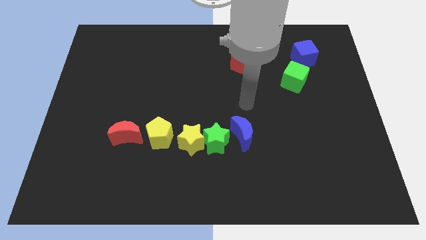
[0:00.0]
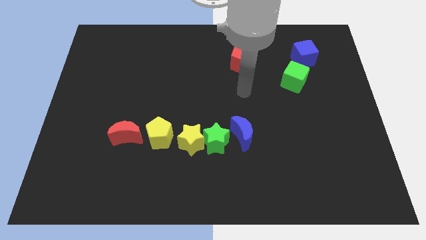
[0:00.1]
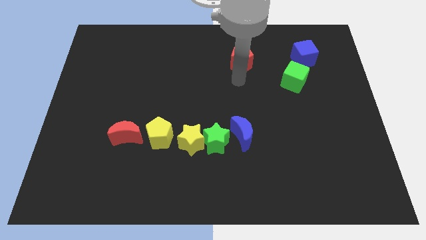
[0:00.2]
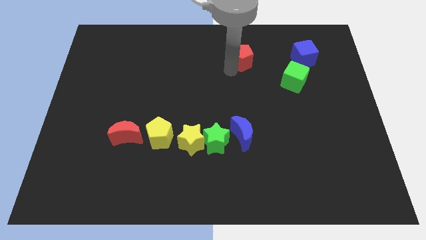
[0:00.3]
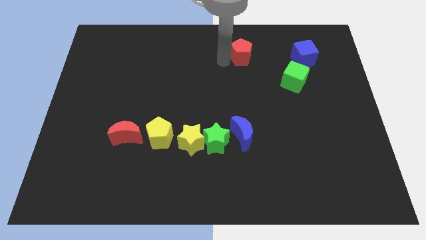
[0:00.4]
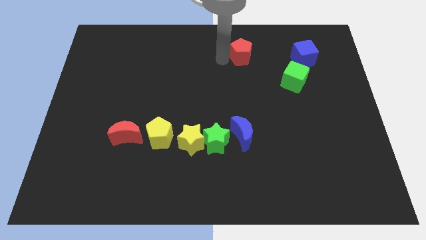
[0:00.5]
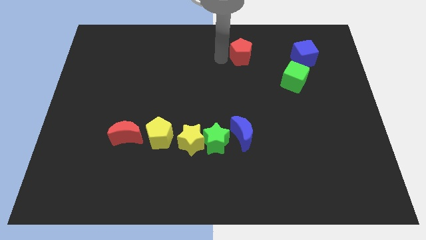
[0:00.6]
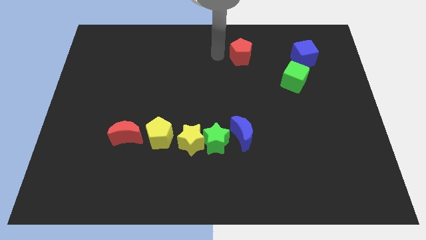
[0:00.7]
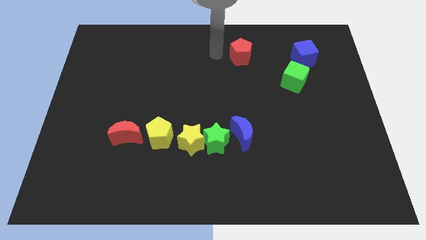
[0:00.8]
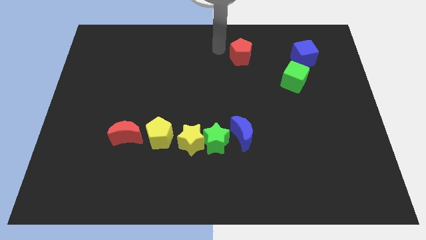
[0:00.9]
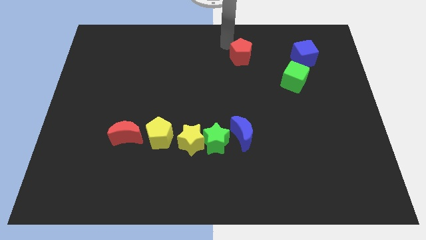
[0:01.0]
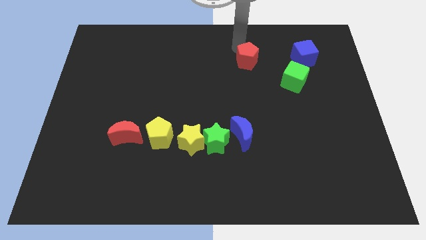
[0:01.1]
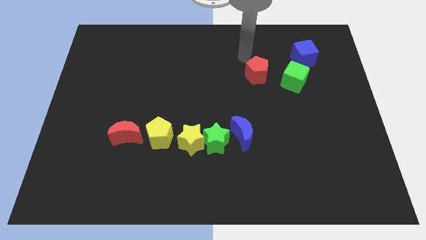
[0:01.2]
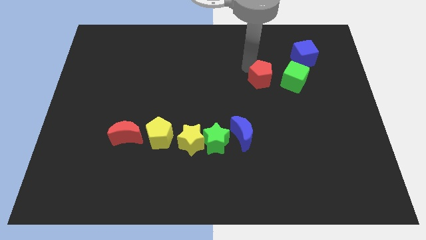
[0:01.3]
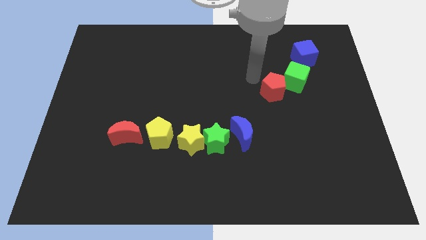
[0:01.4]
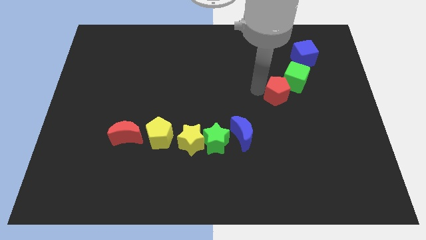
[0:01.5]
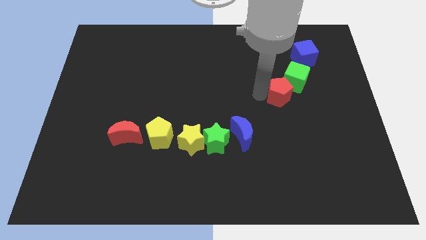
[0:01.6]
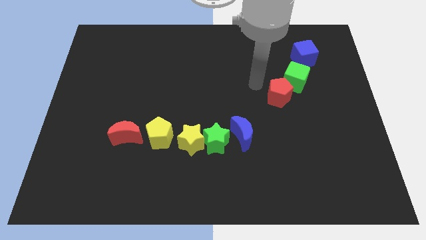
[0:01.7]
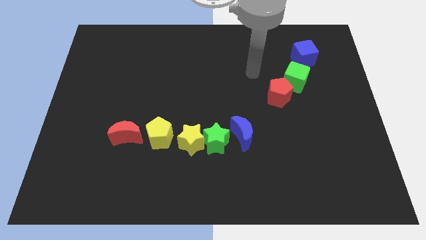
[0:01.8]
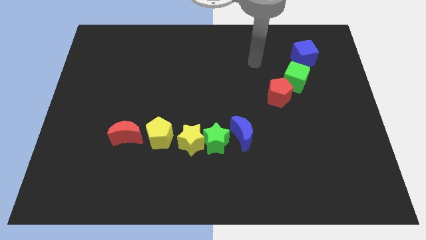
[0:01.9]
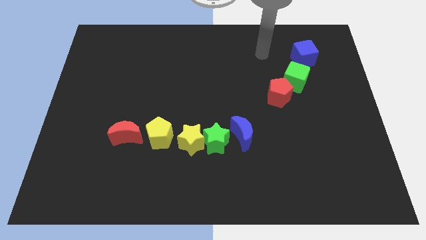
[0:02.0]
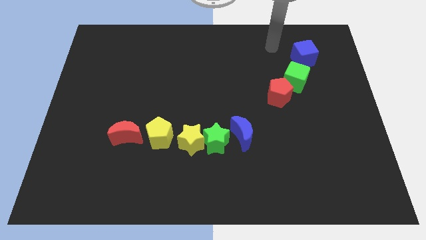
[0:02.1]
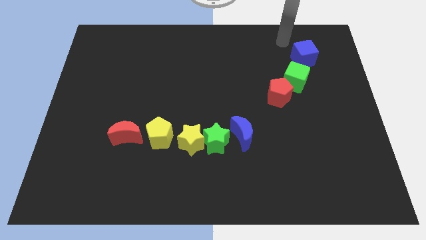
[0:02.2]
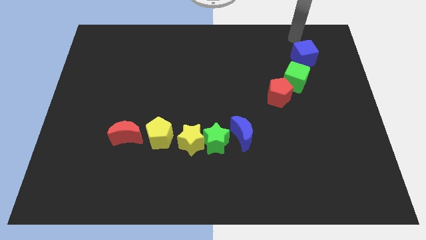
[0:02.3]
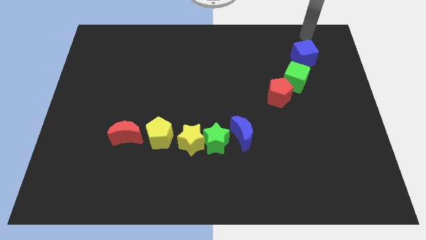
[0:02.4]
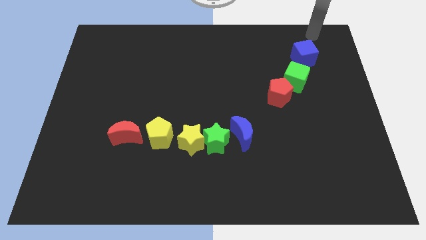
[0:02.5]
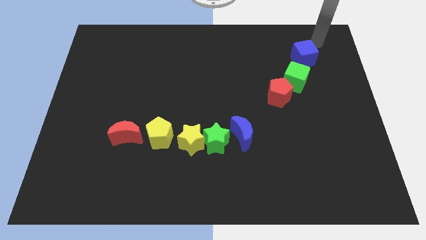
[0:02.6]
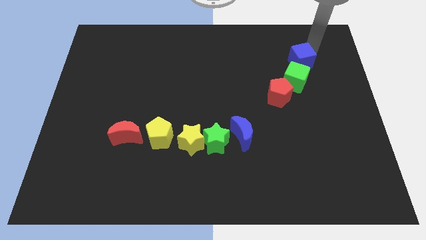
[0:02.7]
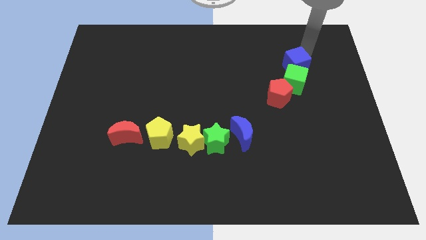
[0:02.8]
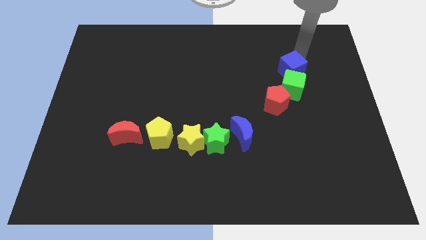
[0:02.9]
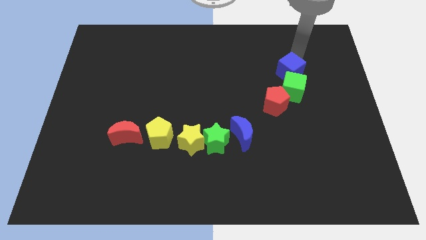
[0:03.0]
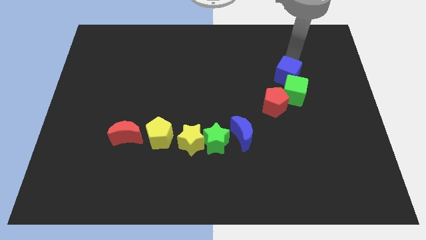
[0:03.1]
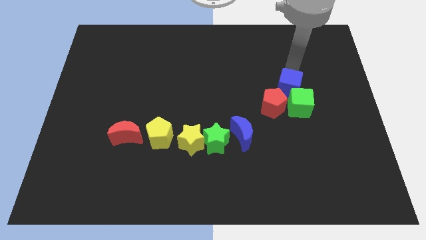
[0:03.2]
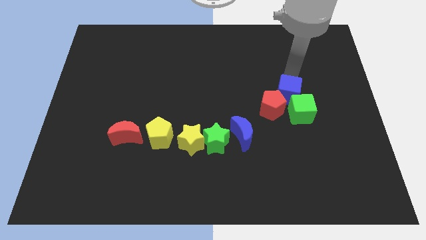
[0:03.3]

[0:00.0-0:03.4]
drag both the cubes and red pentagon towards the bottom side of the board

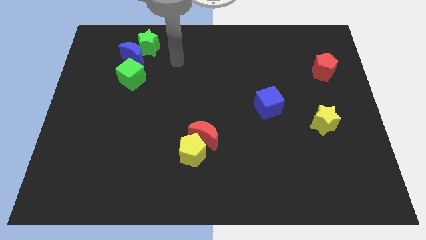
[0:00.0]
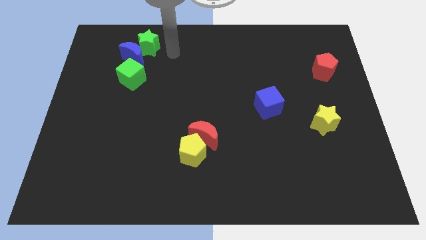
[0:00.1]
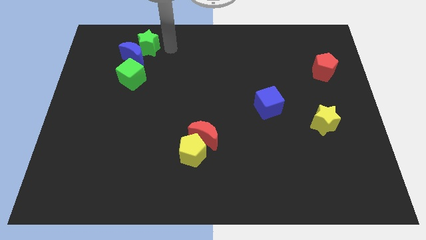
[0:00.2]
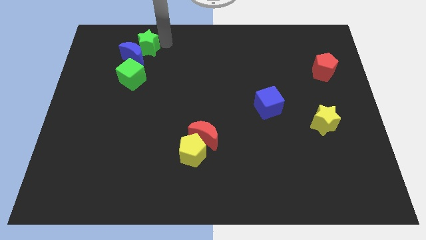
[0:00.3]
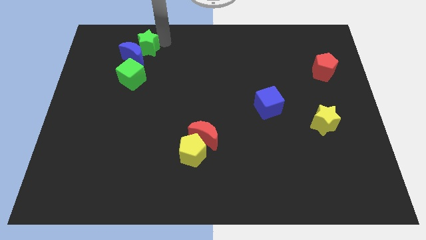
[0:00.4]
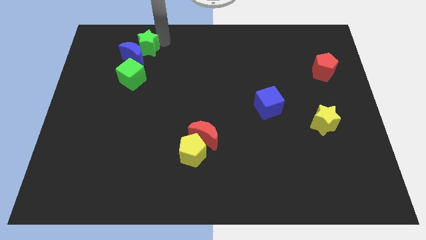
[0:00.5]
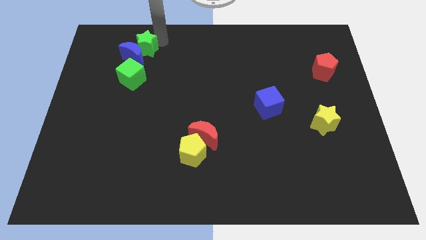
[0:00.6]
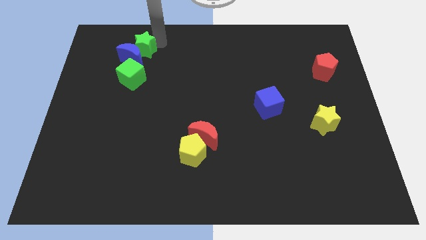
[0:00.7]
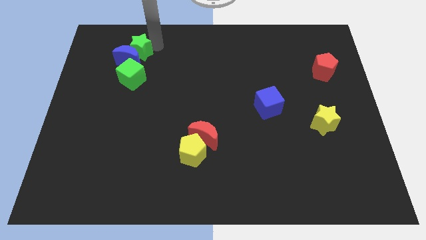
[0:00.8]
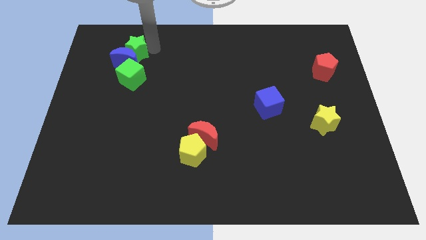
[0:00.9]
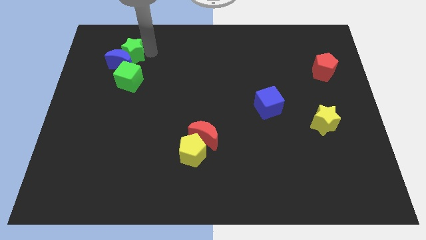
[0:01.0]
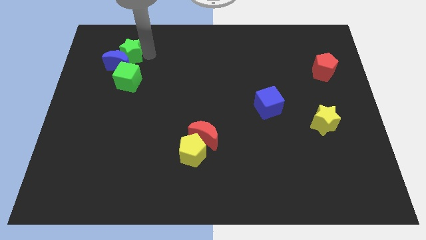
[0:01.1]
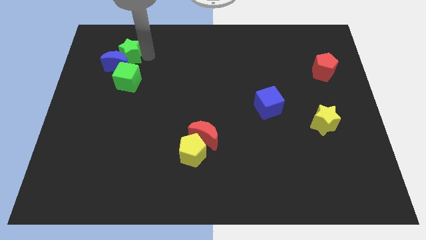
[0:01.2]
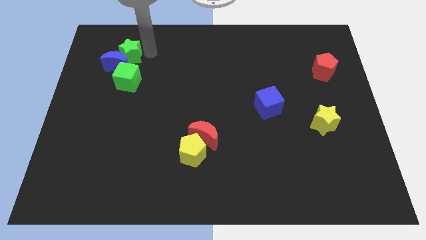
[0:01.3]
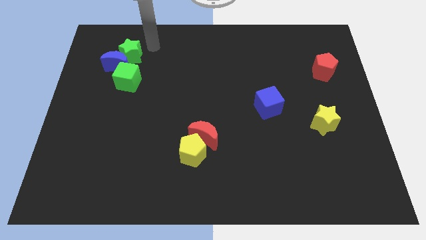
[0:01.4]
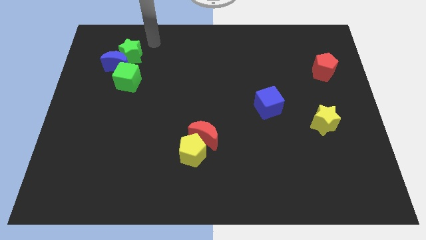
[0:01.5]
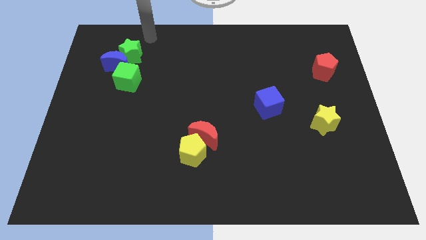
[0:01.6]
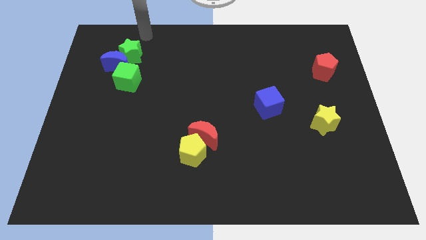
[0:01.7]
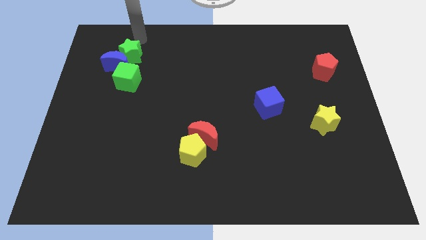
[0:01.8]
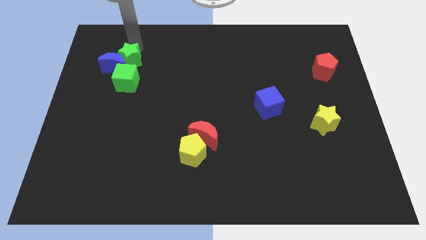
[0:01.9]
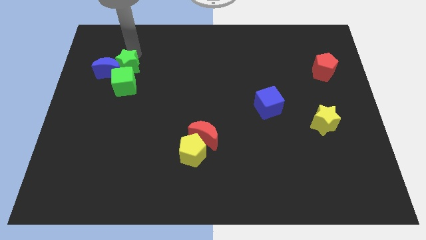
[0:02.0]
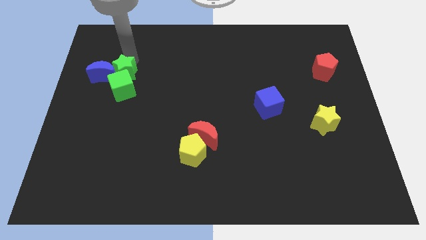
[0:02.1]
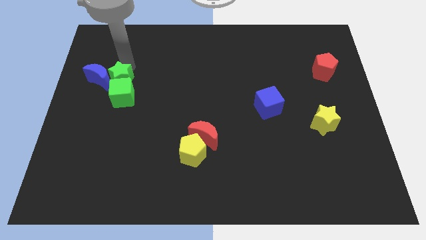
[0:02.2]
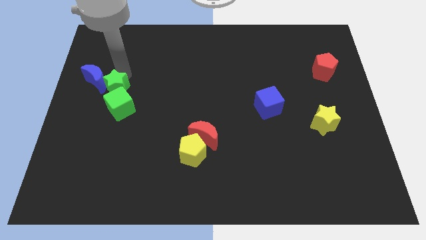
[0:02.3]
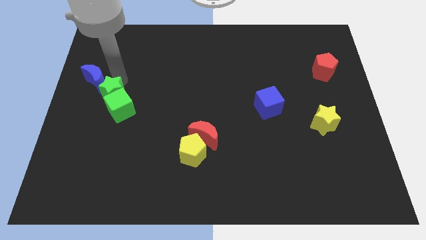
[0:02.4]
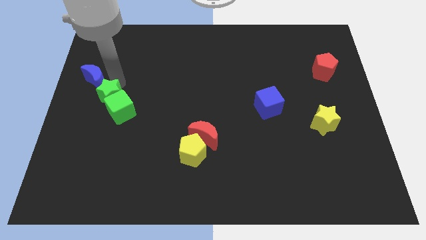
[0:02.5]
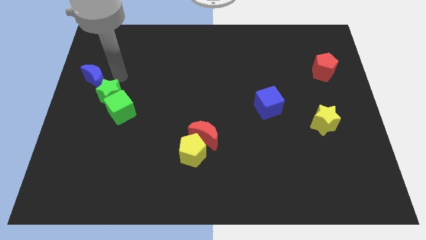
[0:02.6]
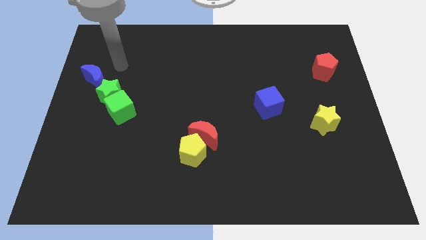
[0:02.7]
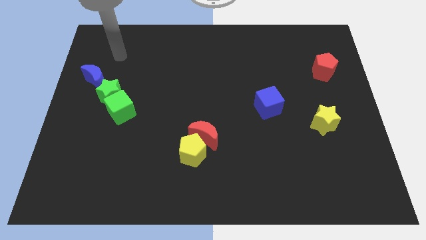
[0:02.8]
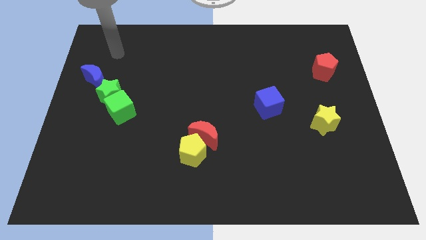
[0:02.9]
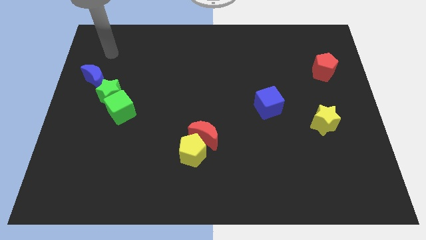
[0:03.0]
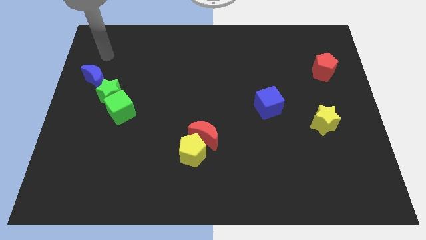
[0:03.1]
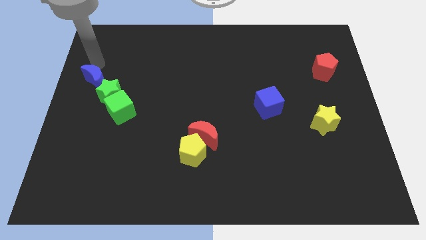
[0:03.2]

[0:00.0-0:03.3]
push the green star downwards

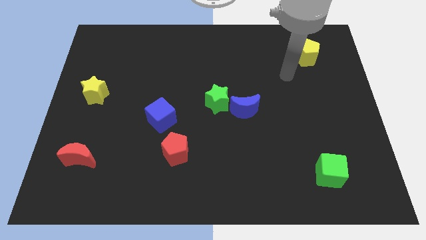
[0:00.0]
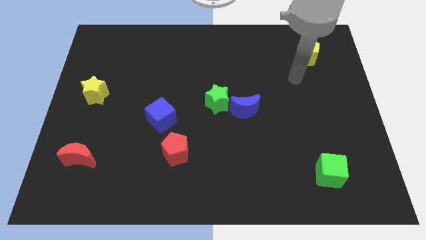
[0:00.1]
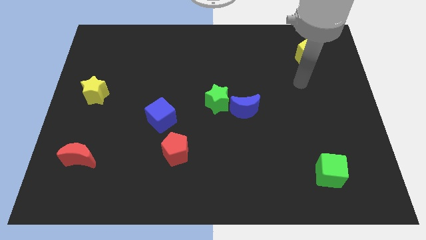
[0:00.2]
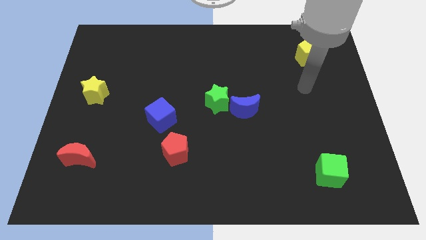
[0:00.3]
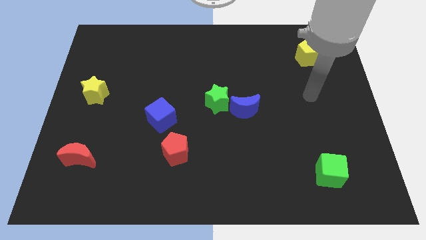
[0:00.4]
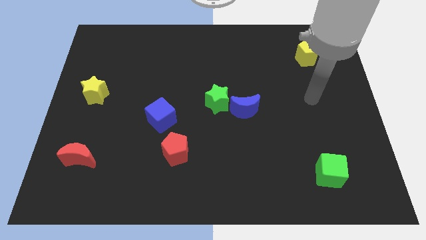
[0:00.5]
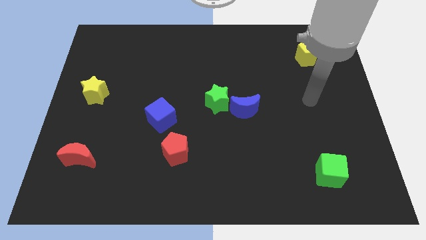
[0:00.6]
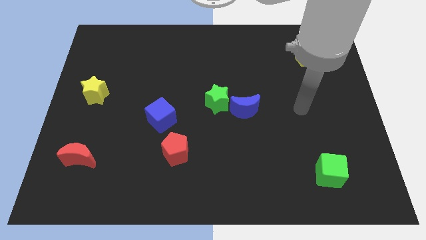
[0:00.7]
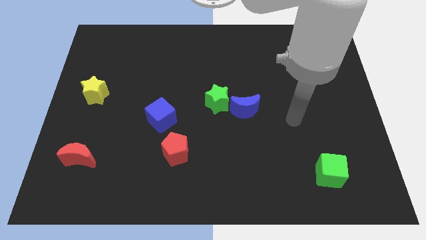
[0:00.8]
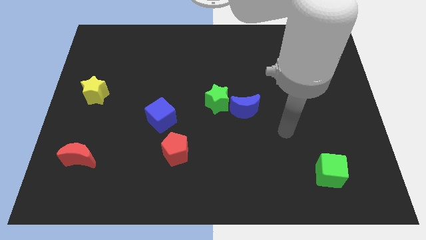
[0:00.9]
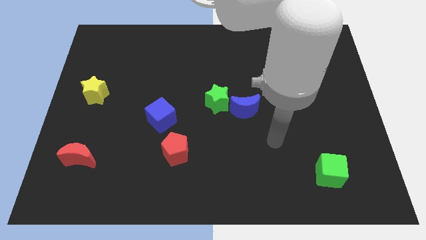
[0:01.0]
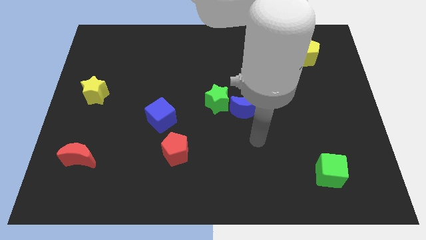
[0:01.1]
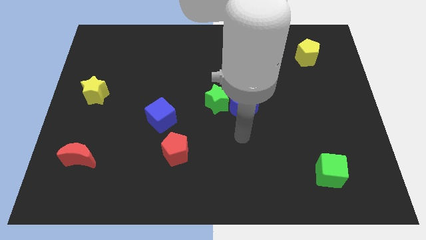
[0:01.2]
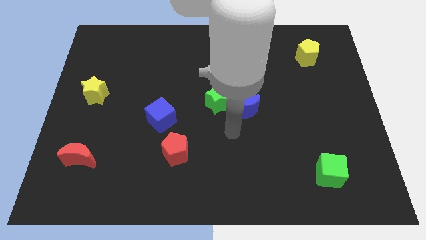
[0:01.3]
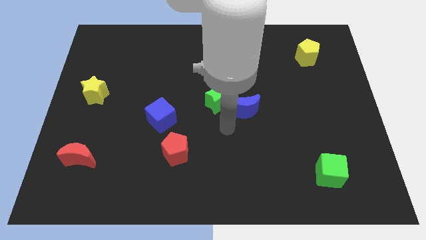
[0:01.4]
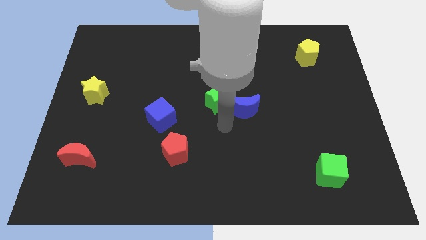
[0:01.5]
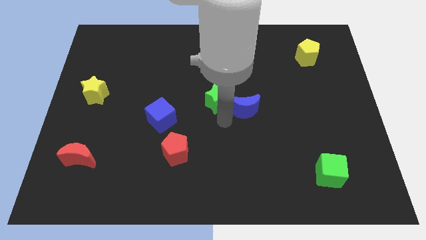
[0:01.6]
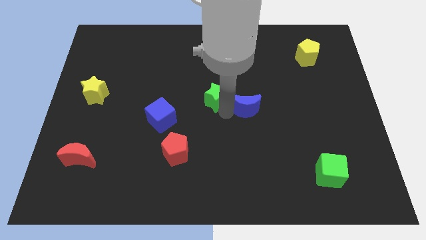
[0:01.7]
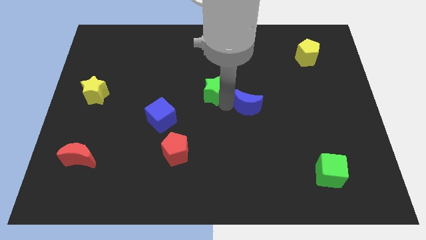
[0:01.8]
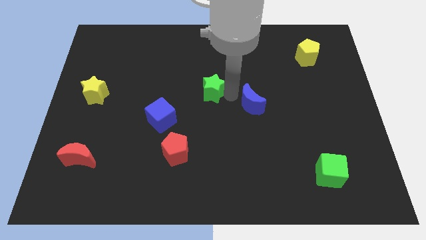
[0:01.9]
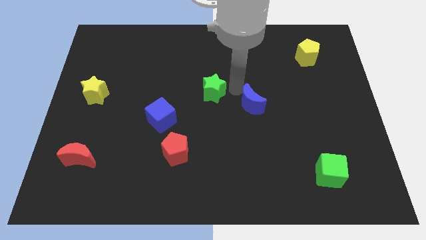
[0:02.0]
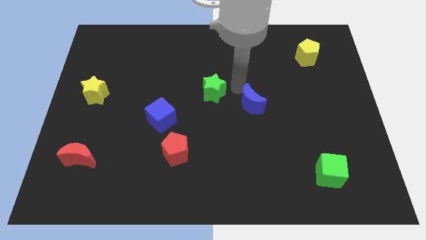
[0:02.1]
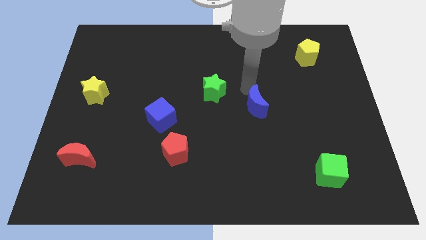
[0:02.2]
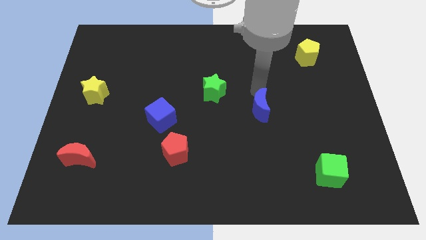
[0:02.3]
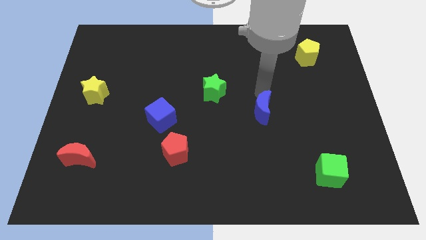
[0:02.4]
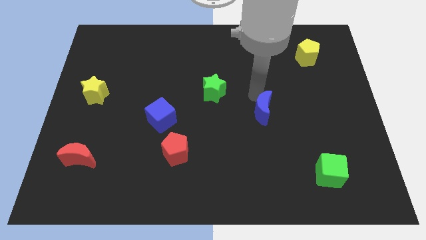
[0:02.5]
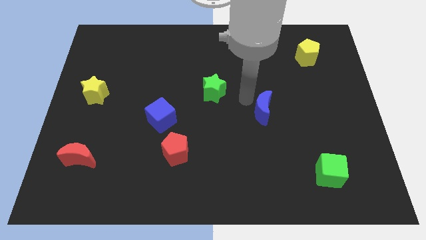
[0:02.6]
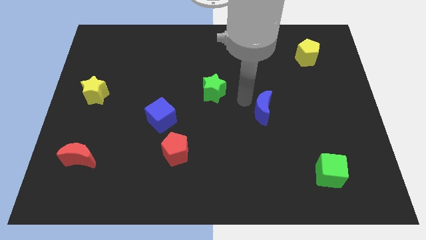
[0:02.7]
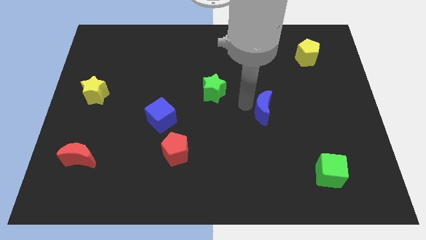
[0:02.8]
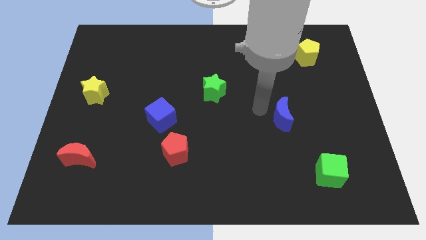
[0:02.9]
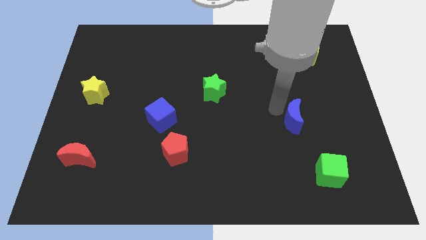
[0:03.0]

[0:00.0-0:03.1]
push green star and the blue moon away from each other
